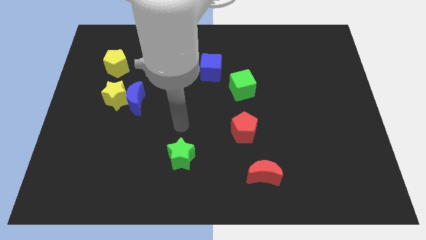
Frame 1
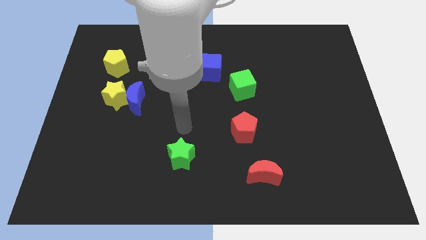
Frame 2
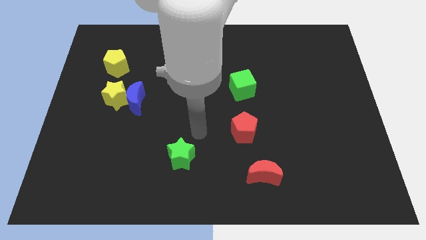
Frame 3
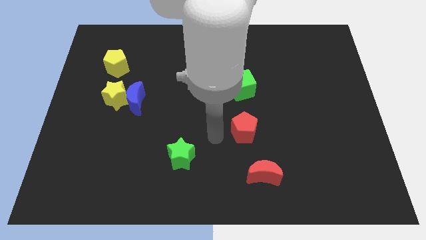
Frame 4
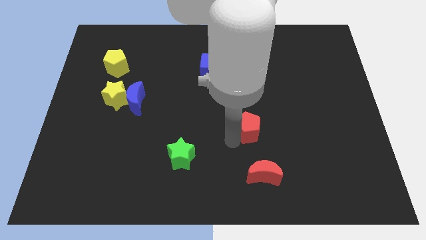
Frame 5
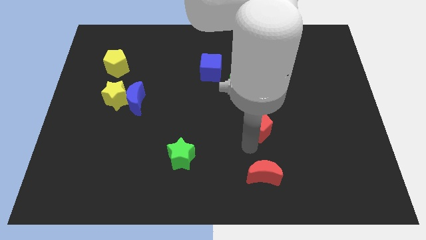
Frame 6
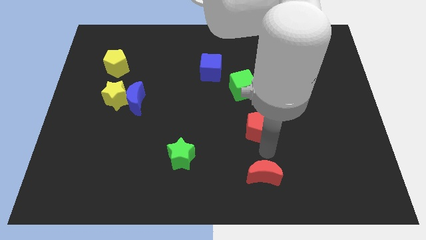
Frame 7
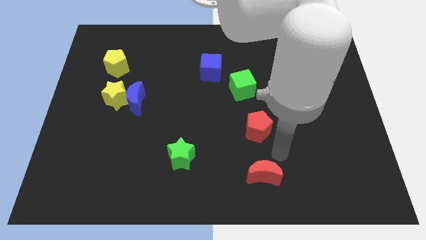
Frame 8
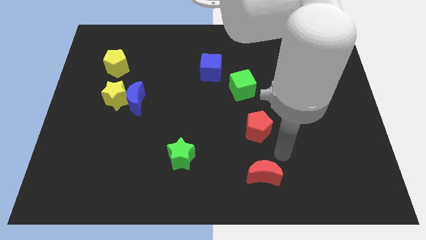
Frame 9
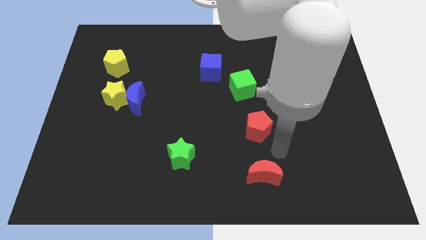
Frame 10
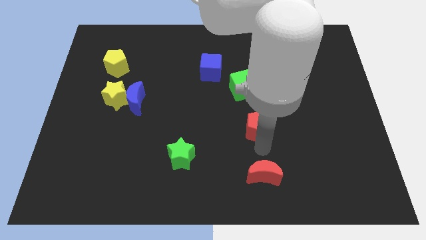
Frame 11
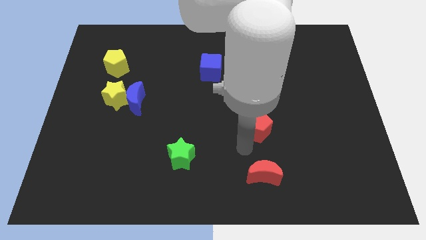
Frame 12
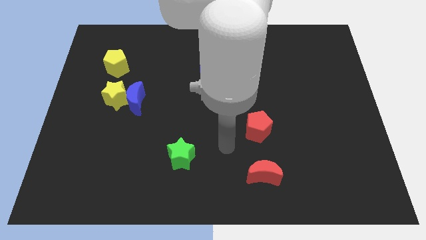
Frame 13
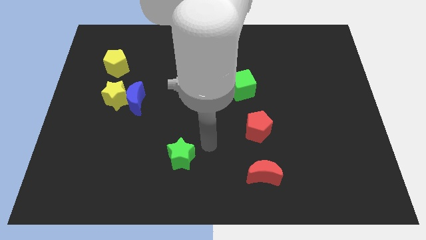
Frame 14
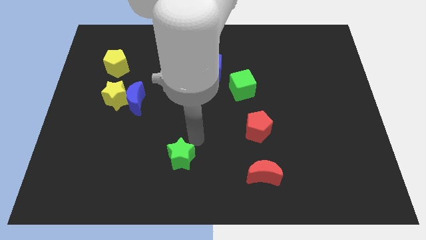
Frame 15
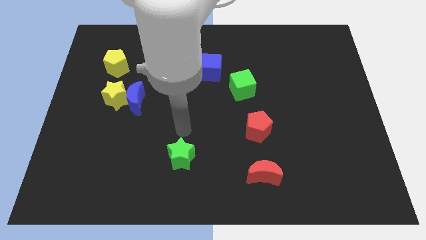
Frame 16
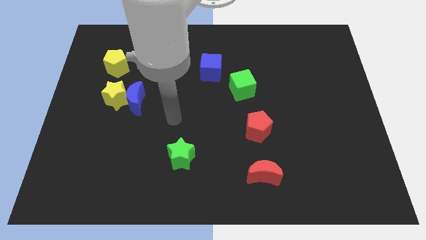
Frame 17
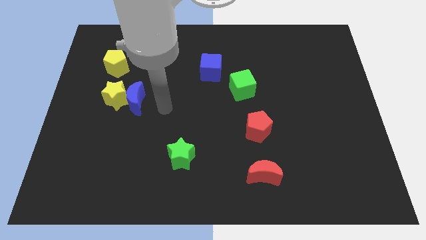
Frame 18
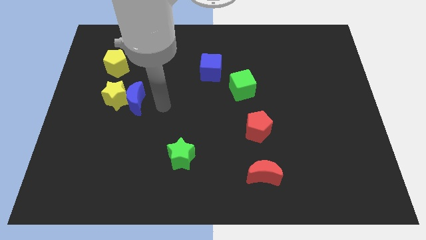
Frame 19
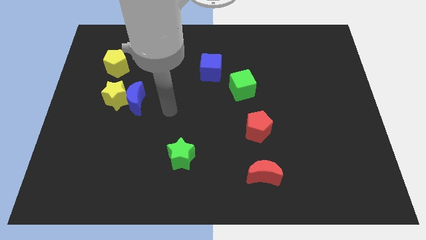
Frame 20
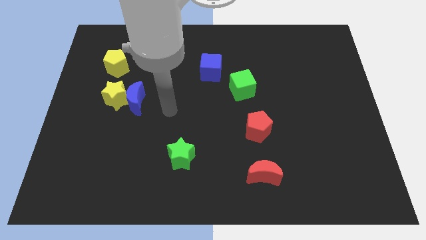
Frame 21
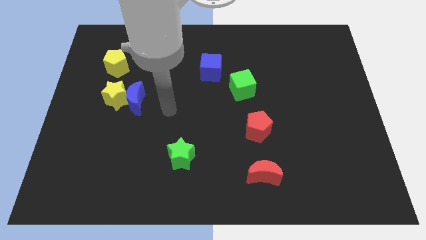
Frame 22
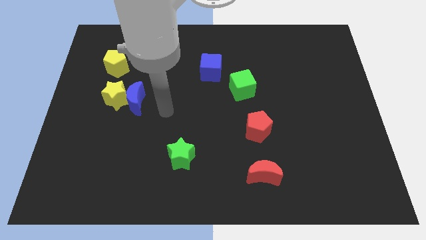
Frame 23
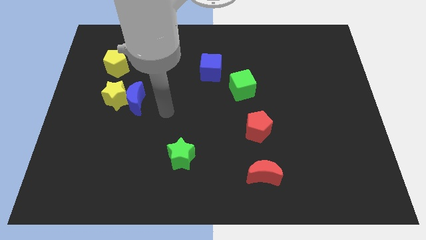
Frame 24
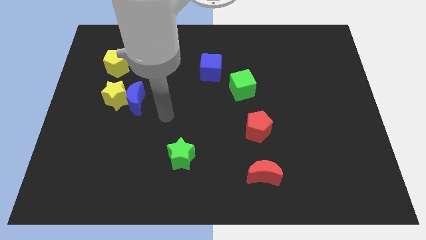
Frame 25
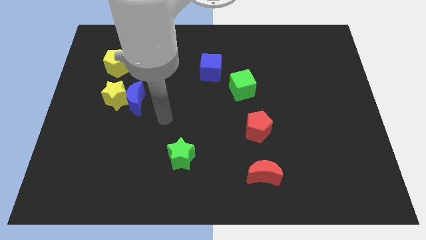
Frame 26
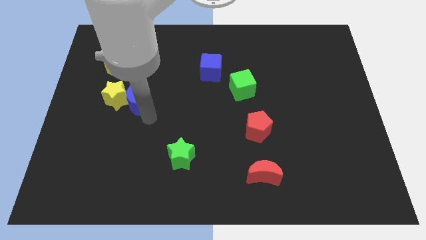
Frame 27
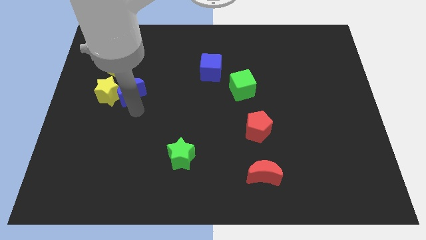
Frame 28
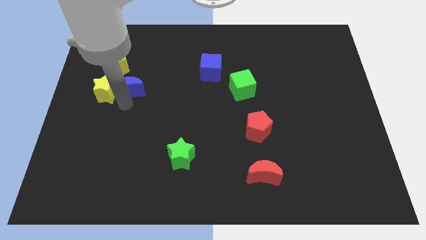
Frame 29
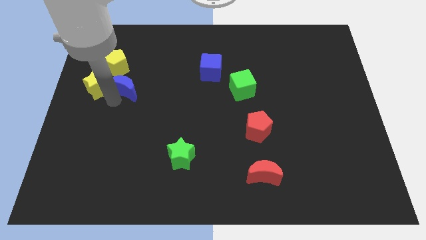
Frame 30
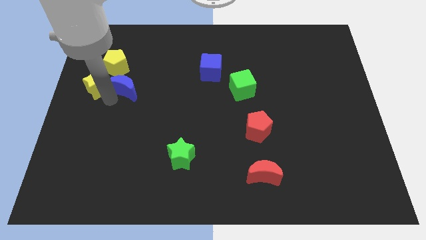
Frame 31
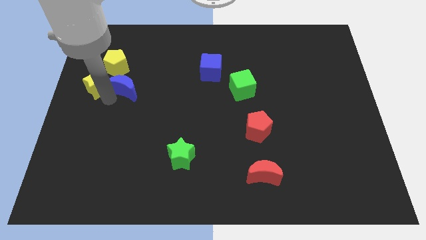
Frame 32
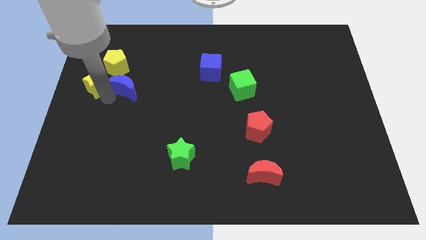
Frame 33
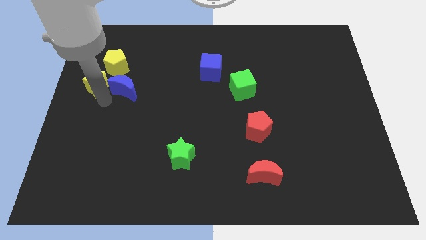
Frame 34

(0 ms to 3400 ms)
adjust the red pentagon blue crescent and yellow star to for a diagonal line of blocks

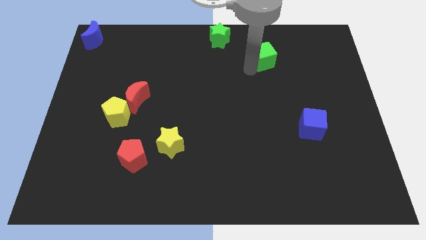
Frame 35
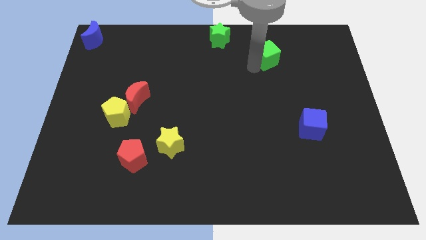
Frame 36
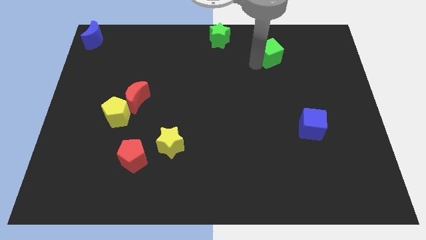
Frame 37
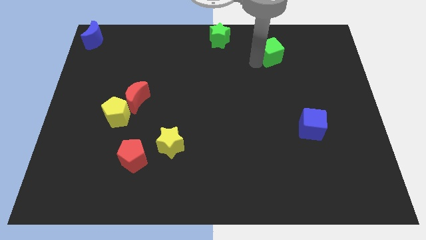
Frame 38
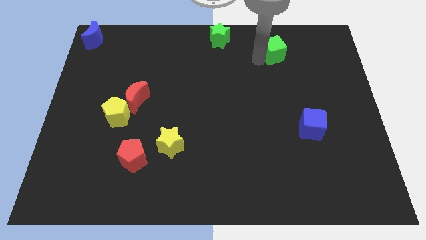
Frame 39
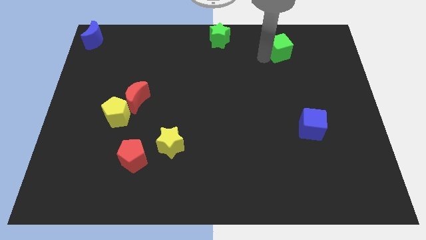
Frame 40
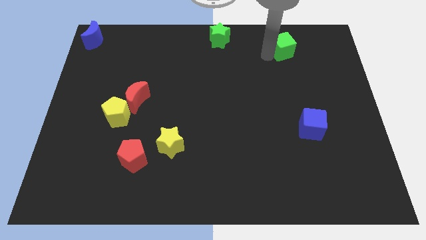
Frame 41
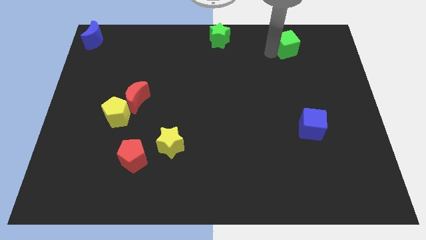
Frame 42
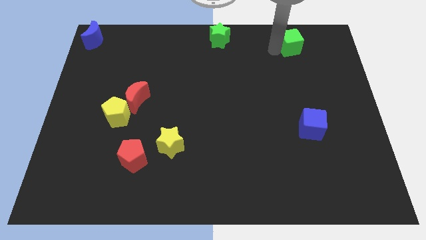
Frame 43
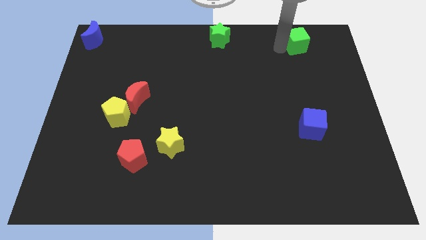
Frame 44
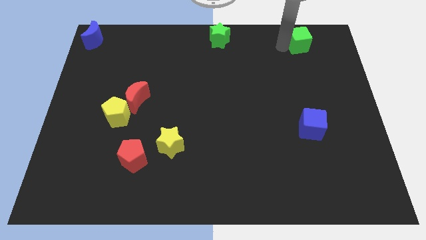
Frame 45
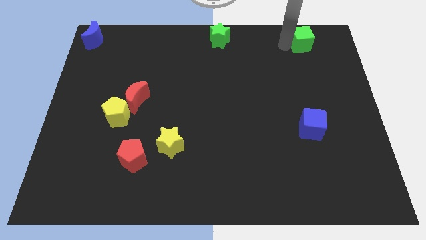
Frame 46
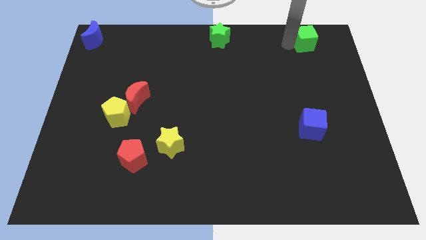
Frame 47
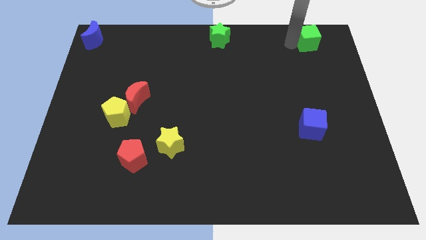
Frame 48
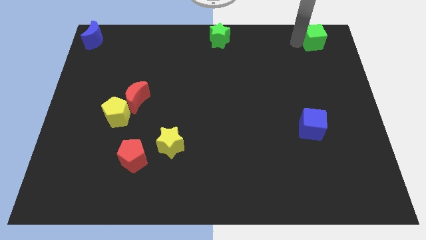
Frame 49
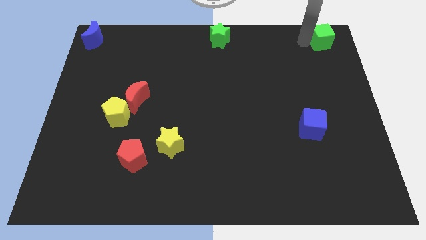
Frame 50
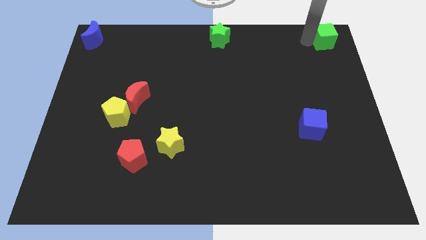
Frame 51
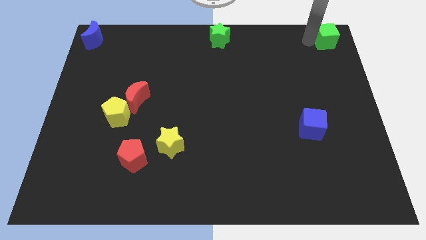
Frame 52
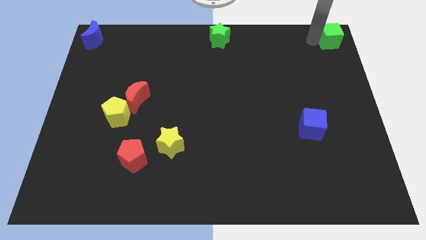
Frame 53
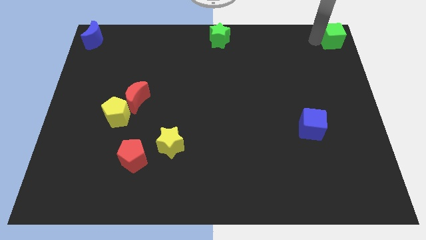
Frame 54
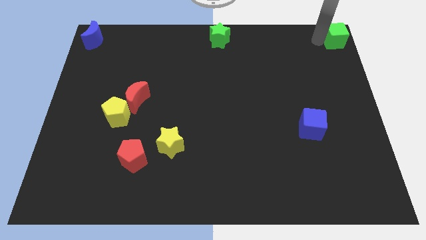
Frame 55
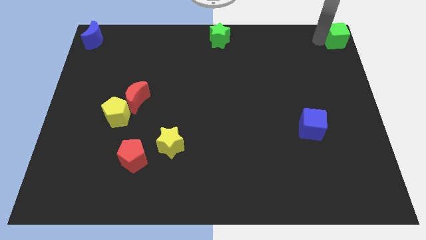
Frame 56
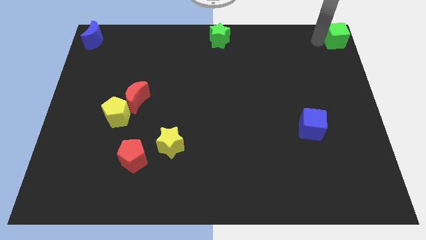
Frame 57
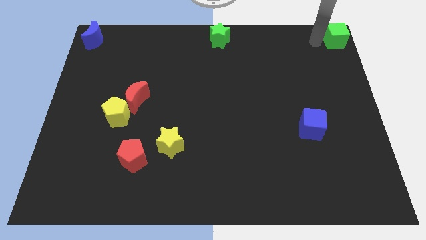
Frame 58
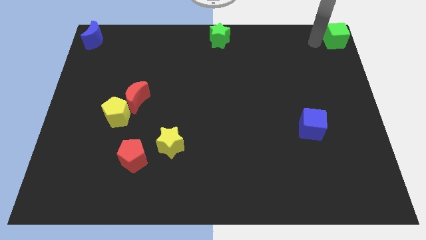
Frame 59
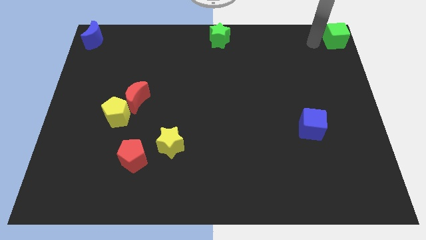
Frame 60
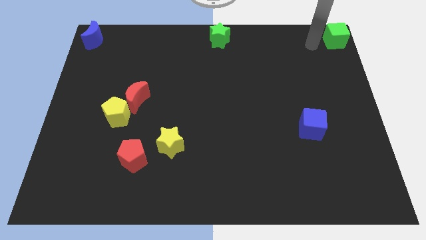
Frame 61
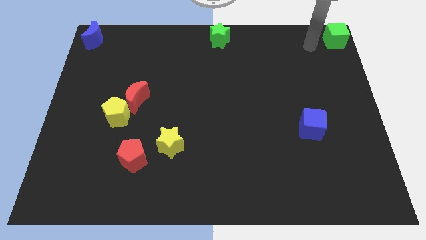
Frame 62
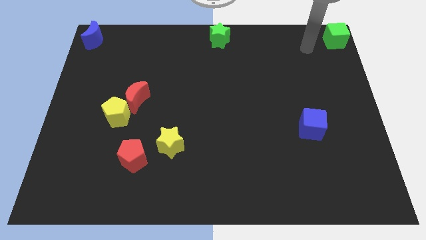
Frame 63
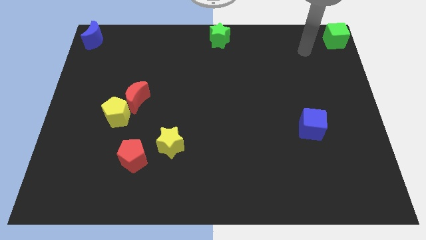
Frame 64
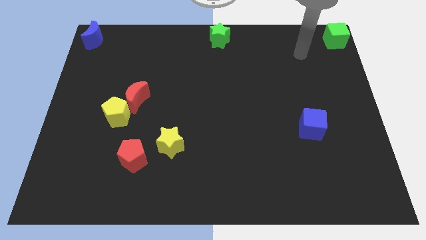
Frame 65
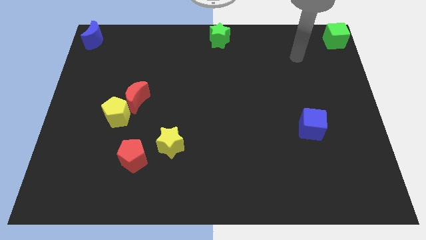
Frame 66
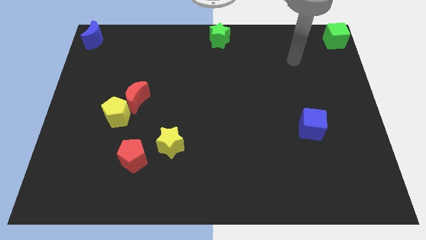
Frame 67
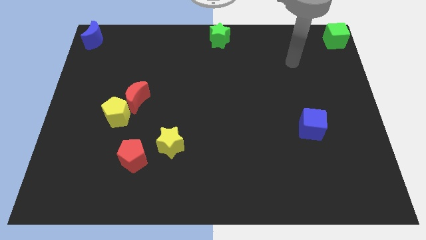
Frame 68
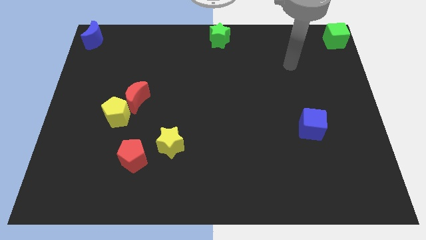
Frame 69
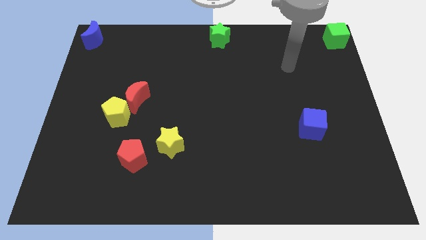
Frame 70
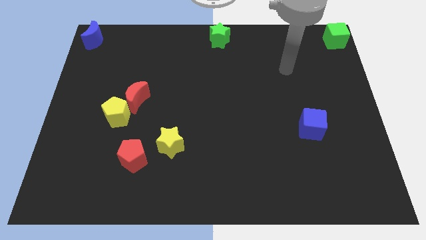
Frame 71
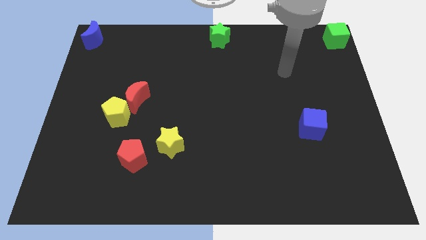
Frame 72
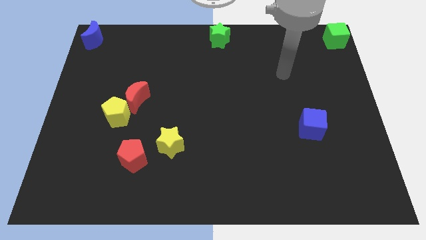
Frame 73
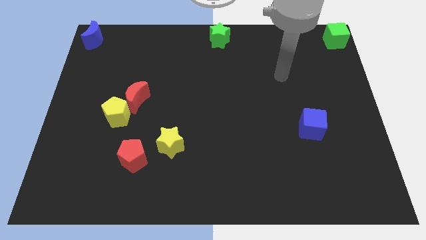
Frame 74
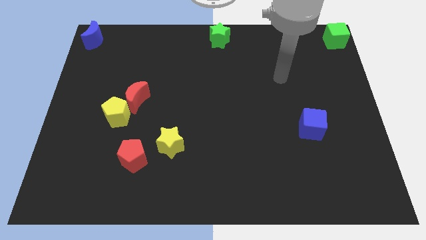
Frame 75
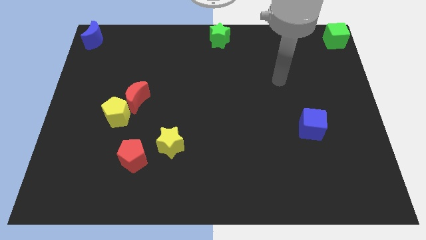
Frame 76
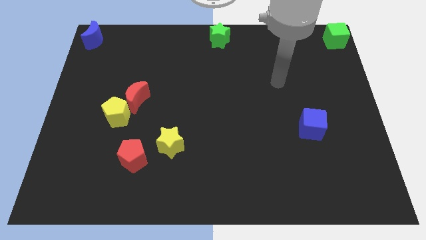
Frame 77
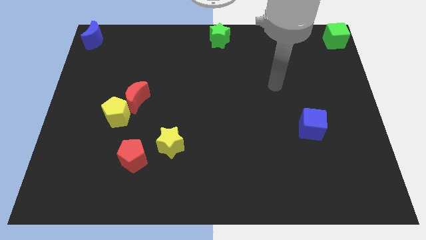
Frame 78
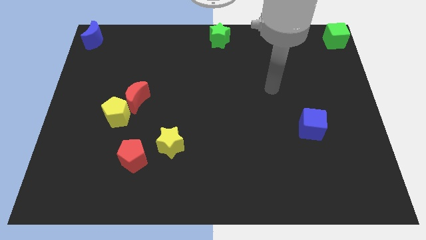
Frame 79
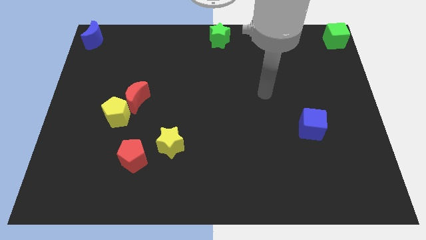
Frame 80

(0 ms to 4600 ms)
place green cube to the top right corner

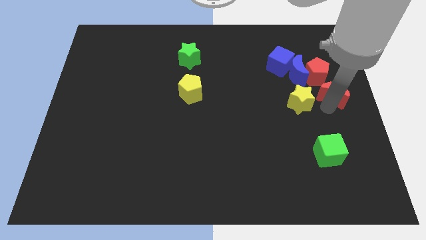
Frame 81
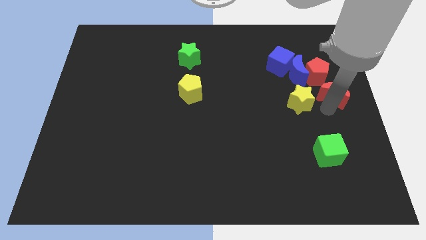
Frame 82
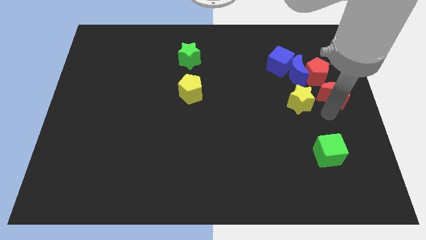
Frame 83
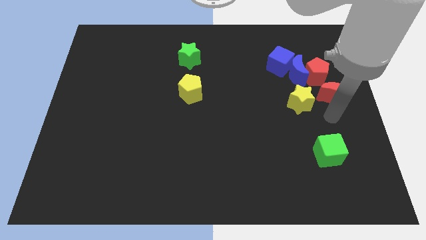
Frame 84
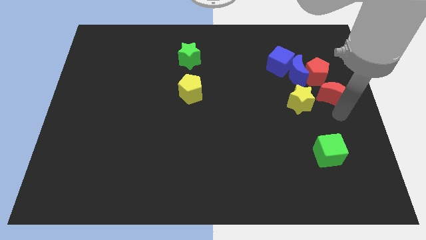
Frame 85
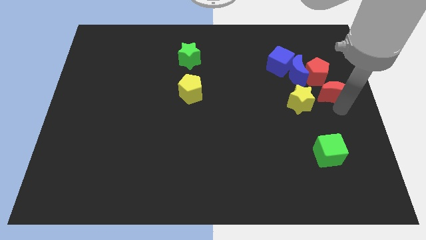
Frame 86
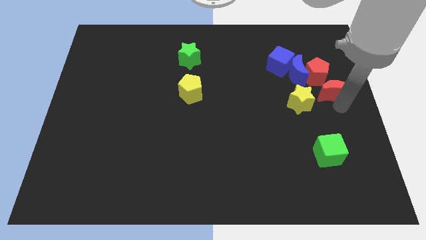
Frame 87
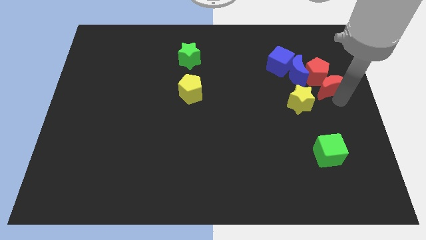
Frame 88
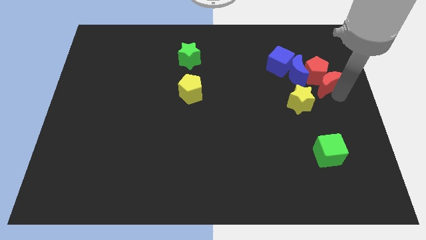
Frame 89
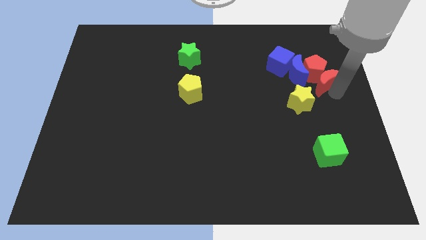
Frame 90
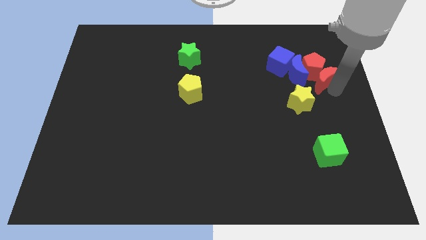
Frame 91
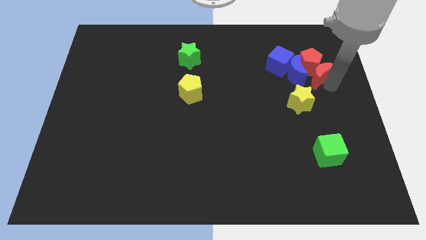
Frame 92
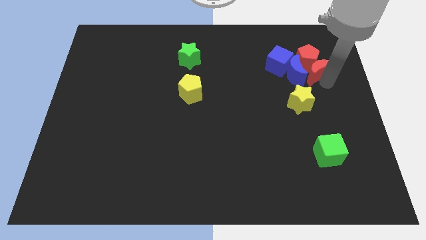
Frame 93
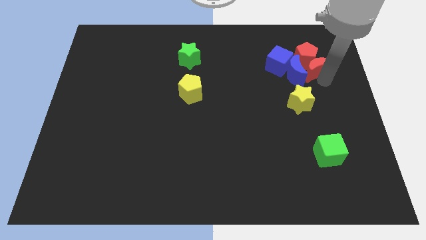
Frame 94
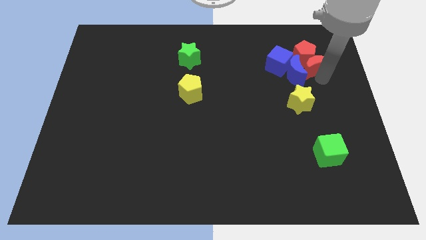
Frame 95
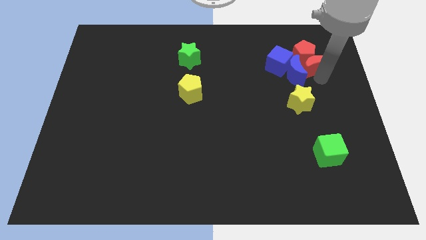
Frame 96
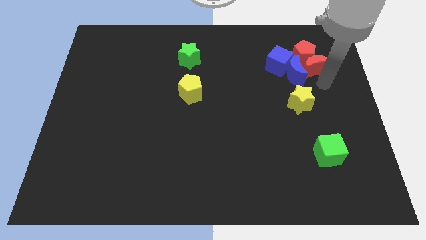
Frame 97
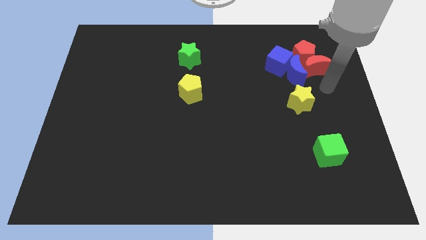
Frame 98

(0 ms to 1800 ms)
push the red pentagon with the red crescent
